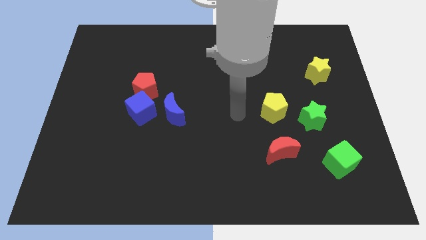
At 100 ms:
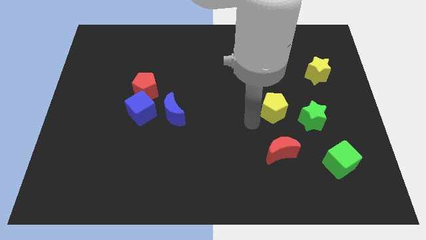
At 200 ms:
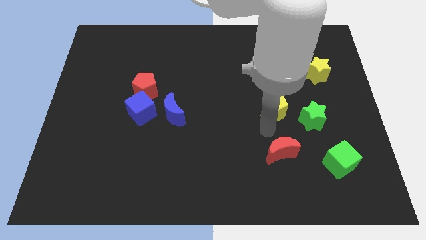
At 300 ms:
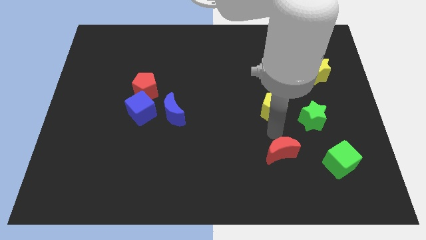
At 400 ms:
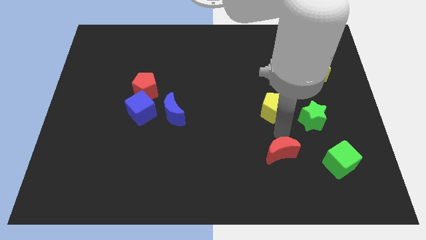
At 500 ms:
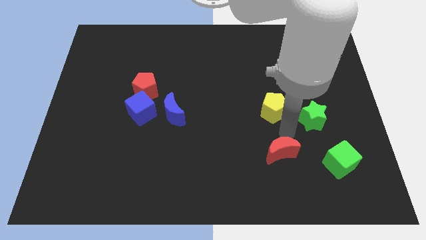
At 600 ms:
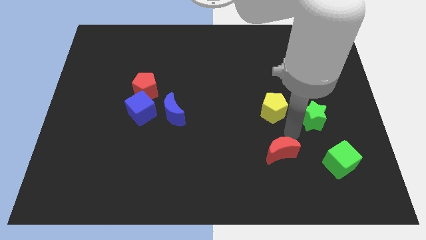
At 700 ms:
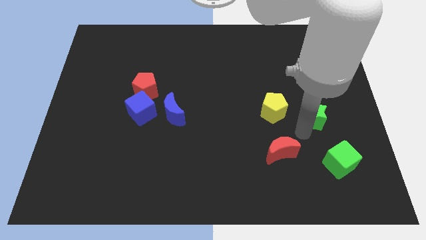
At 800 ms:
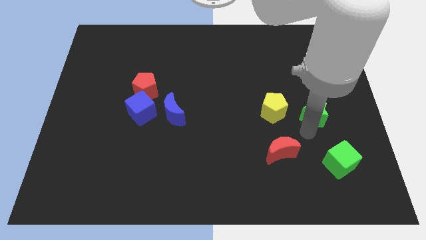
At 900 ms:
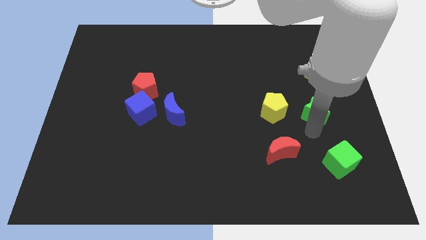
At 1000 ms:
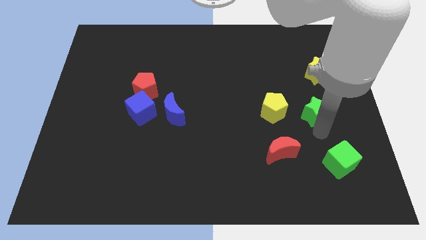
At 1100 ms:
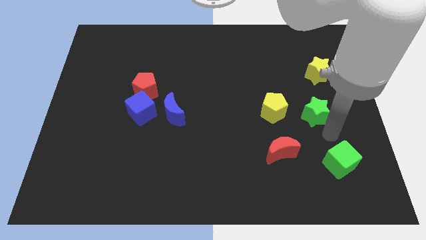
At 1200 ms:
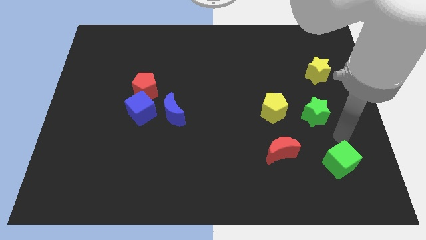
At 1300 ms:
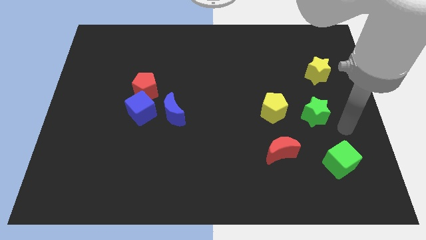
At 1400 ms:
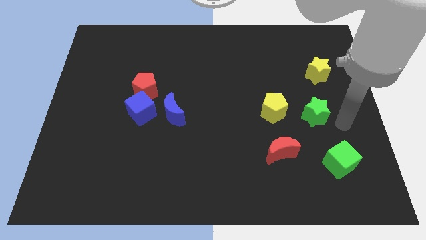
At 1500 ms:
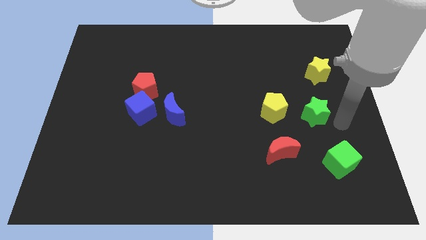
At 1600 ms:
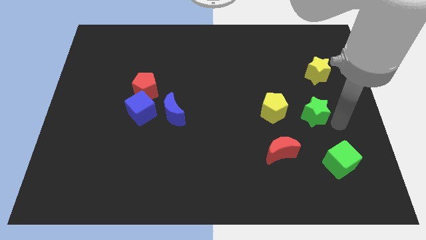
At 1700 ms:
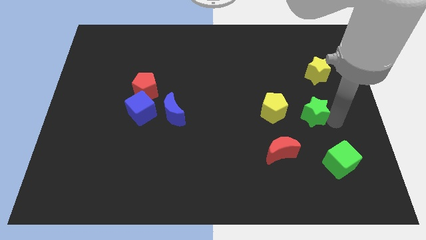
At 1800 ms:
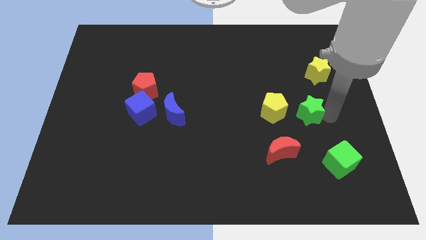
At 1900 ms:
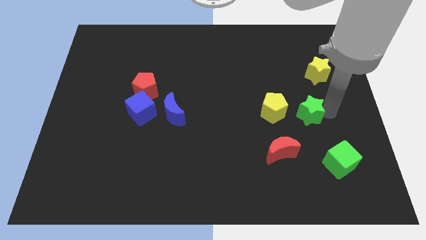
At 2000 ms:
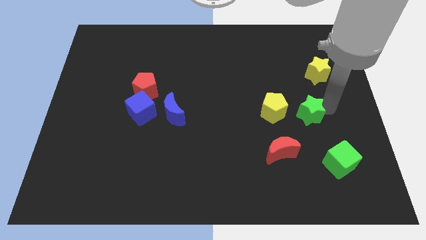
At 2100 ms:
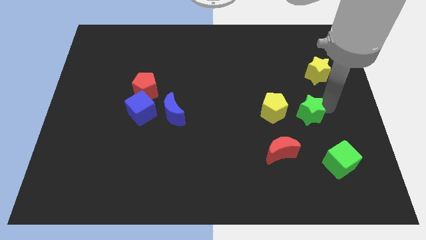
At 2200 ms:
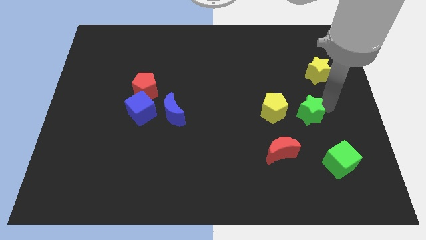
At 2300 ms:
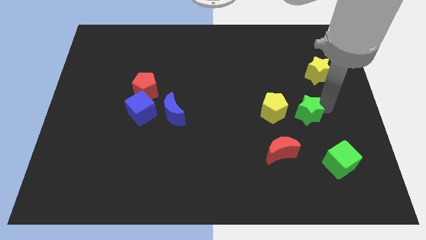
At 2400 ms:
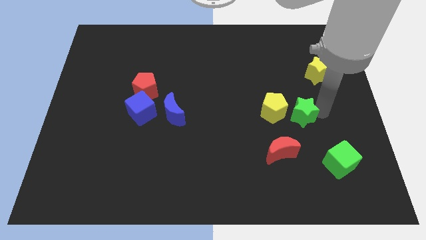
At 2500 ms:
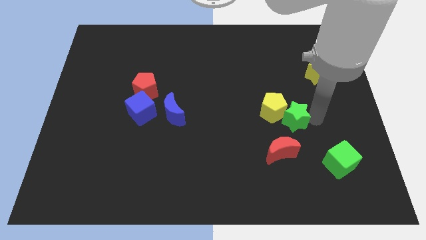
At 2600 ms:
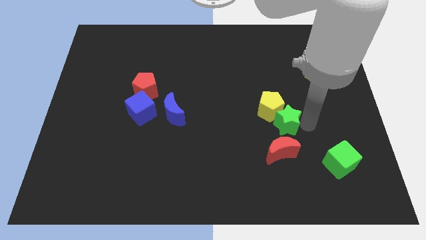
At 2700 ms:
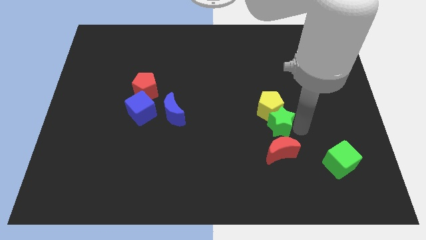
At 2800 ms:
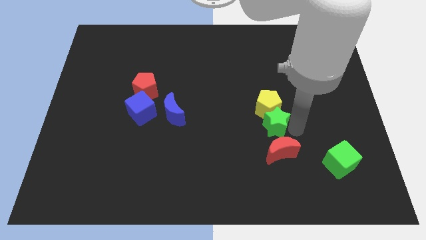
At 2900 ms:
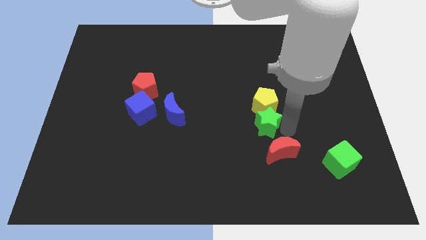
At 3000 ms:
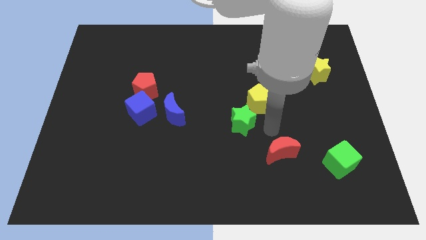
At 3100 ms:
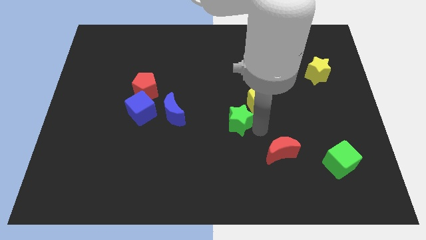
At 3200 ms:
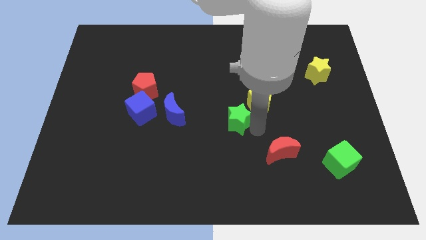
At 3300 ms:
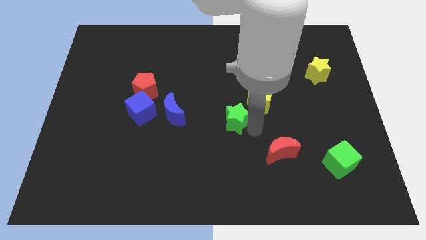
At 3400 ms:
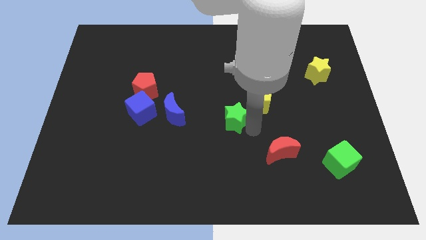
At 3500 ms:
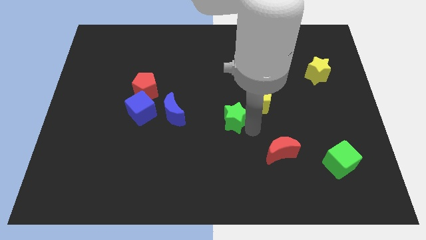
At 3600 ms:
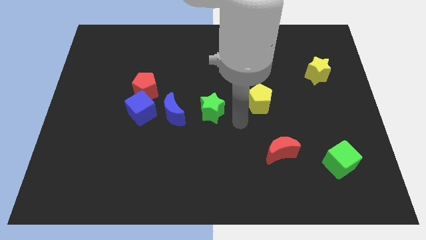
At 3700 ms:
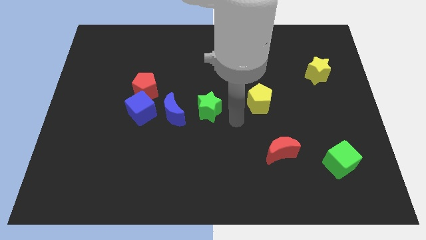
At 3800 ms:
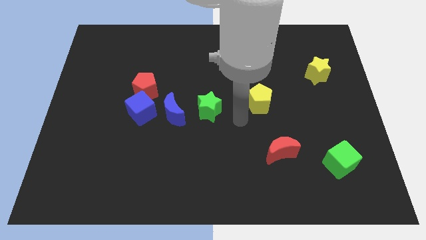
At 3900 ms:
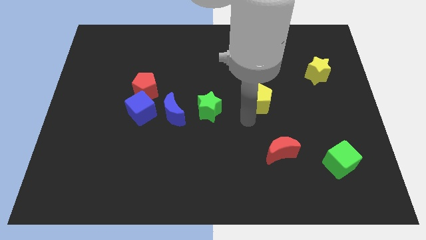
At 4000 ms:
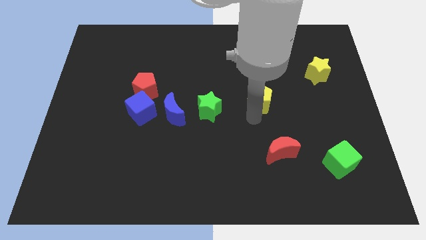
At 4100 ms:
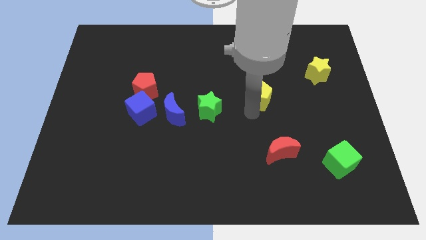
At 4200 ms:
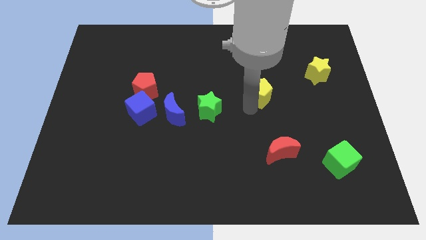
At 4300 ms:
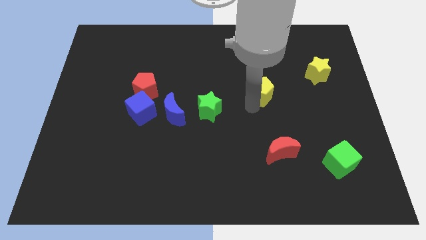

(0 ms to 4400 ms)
move green star slightly left

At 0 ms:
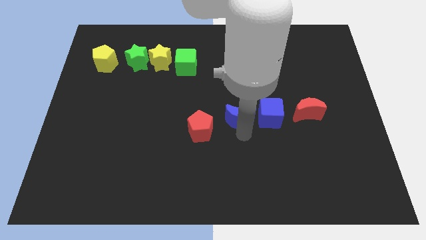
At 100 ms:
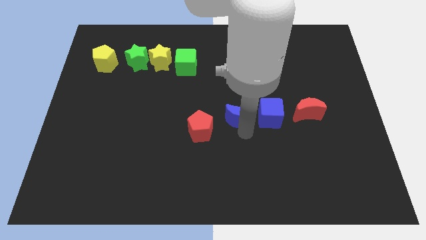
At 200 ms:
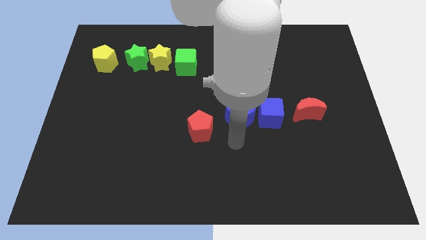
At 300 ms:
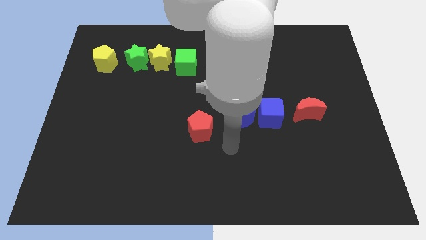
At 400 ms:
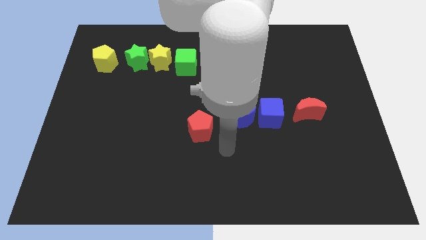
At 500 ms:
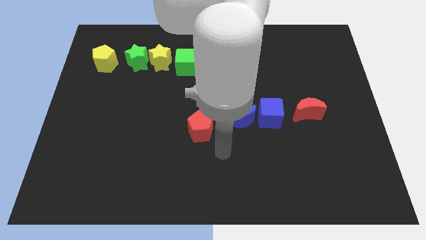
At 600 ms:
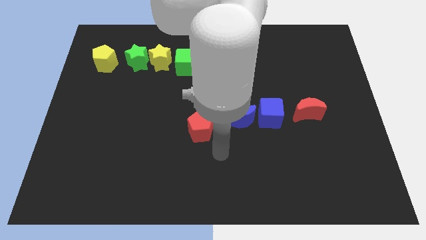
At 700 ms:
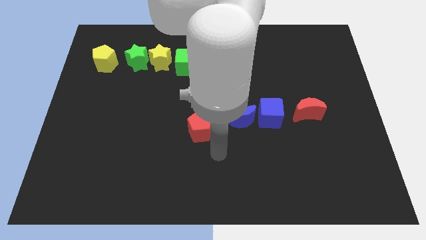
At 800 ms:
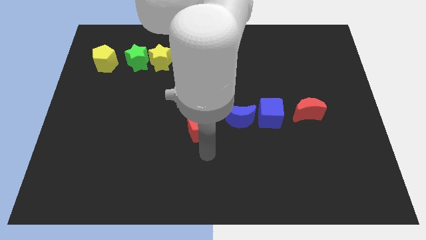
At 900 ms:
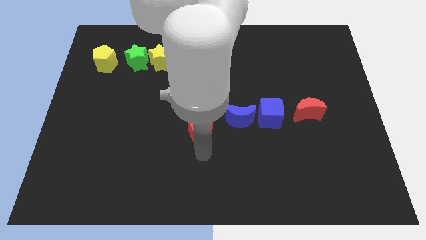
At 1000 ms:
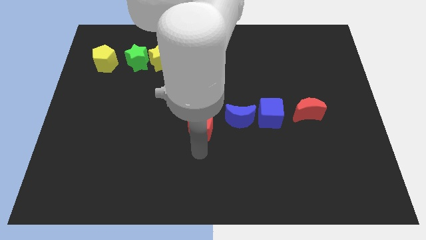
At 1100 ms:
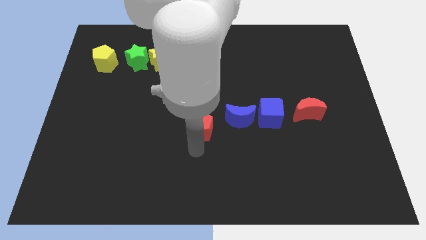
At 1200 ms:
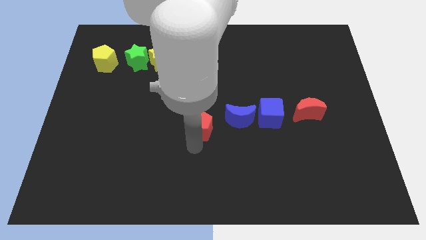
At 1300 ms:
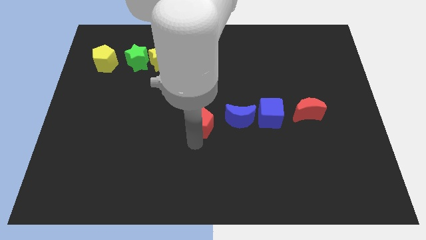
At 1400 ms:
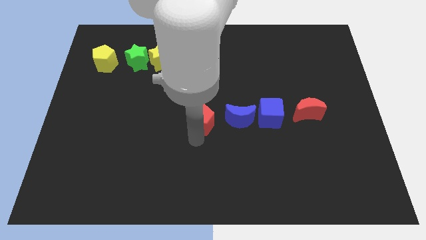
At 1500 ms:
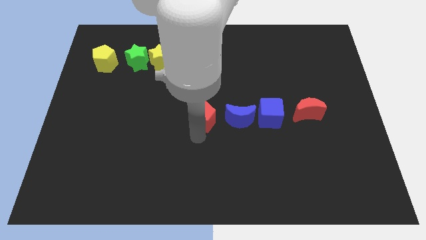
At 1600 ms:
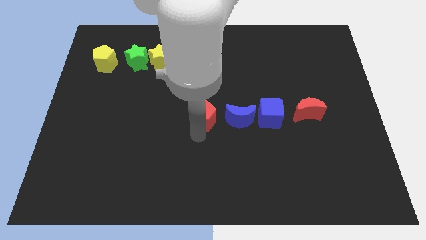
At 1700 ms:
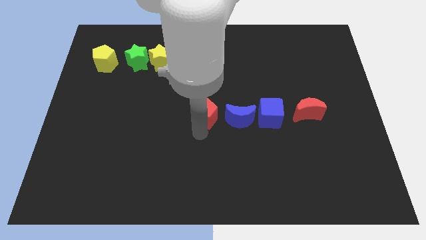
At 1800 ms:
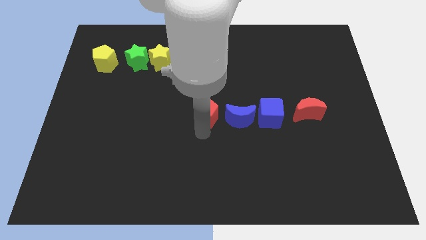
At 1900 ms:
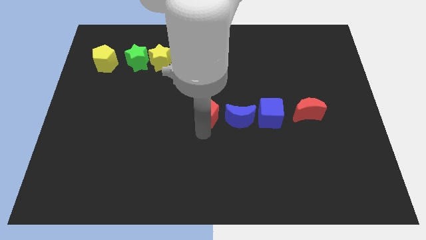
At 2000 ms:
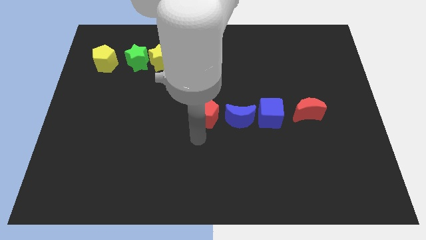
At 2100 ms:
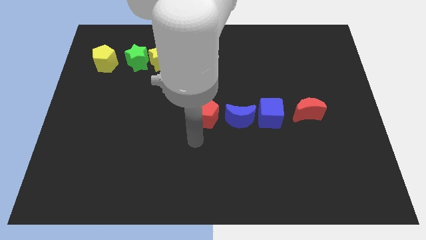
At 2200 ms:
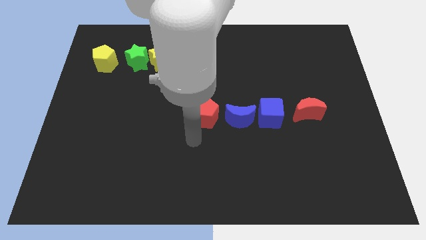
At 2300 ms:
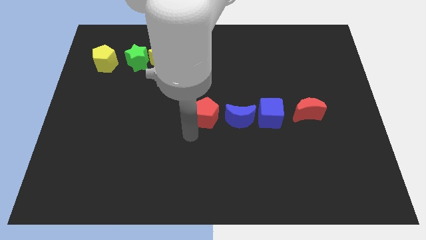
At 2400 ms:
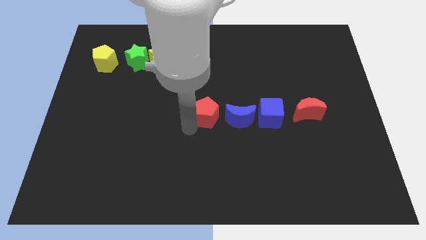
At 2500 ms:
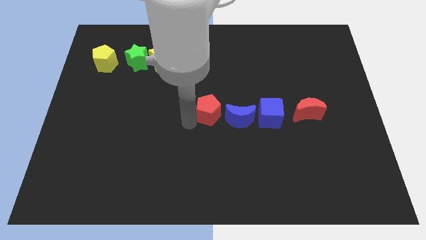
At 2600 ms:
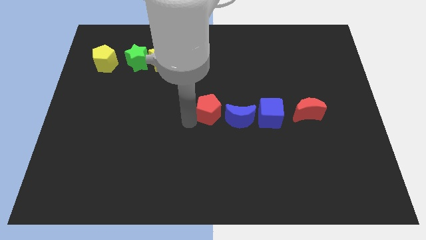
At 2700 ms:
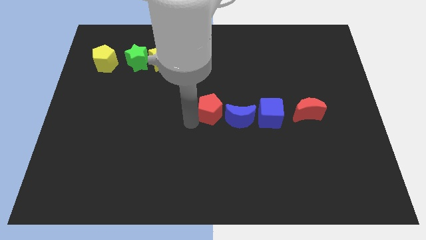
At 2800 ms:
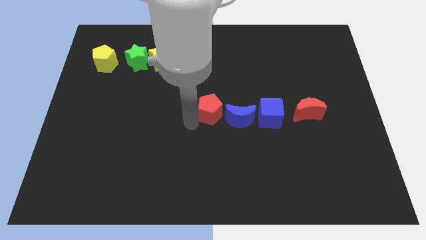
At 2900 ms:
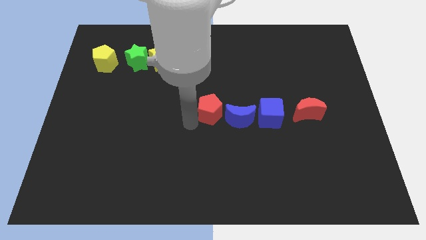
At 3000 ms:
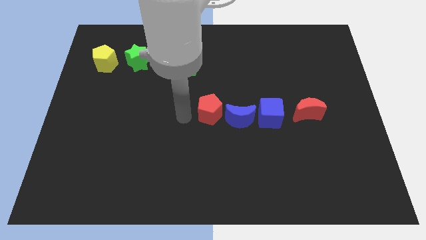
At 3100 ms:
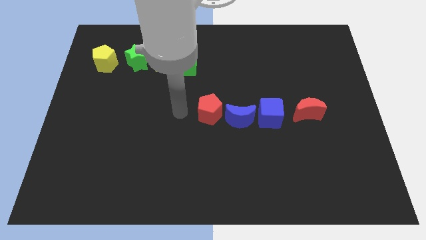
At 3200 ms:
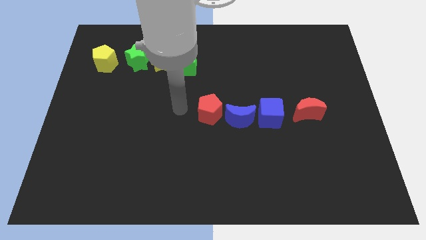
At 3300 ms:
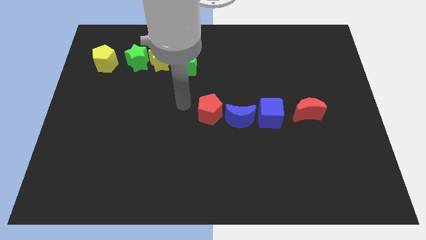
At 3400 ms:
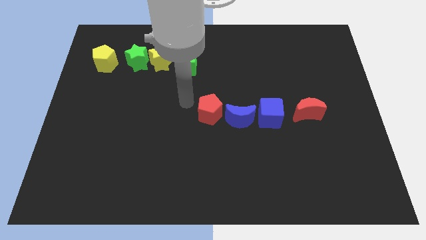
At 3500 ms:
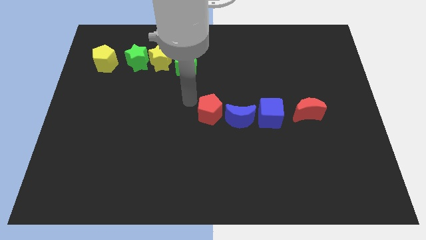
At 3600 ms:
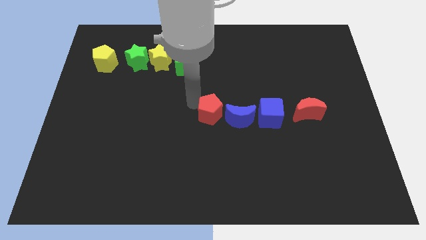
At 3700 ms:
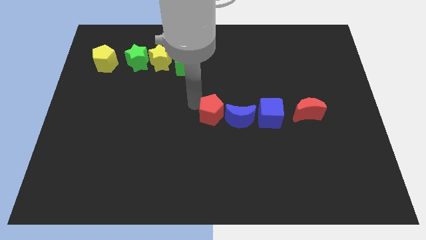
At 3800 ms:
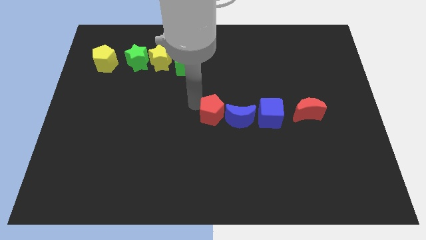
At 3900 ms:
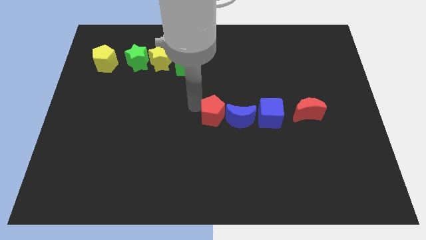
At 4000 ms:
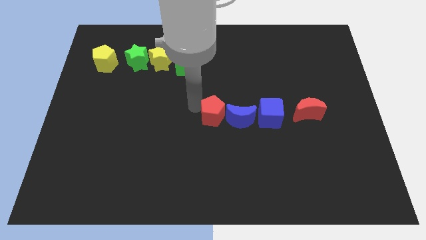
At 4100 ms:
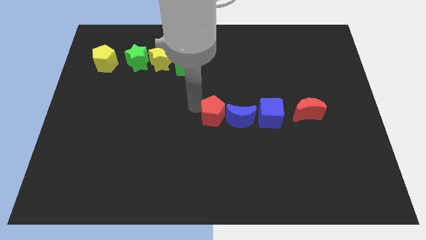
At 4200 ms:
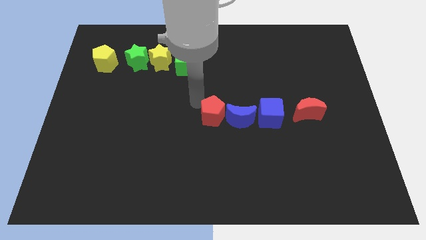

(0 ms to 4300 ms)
move the red pentagon into blue moon

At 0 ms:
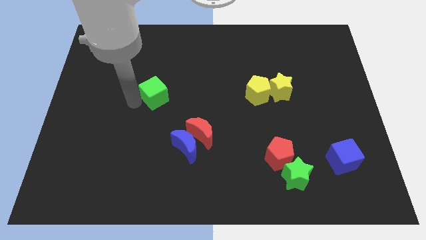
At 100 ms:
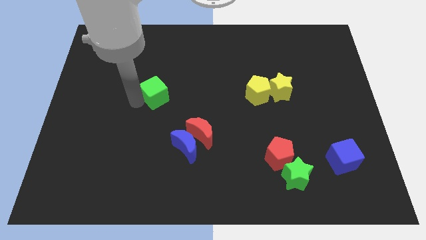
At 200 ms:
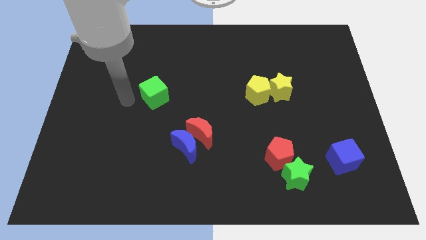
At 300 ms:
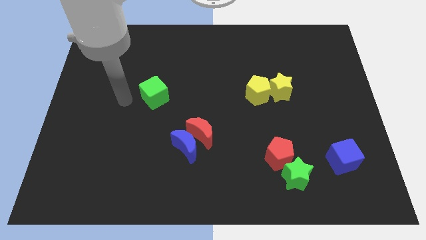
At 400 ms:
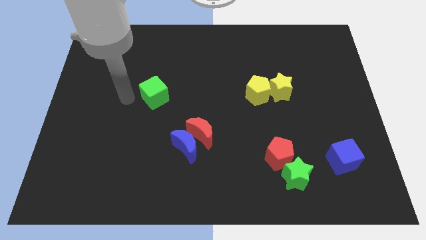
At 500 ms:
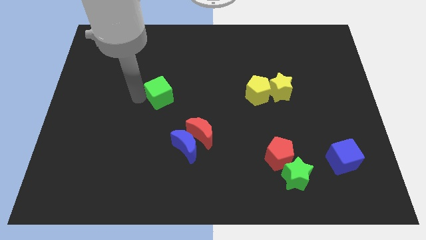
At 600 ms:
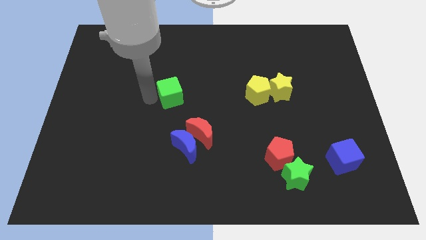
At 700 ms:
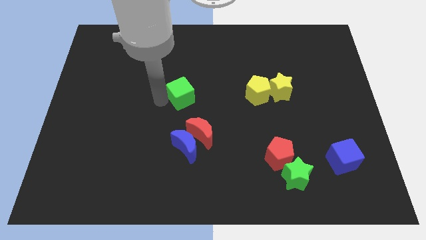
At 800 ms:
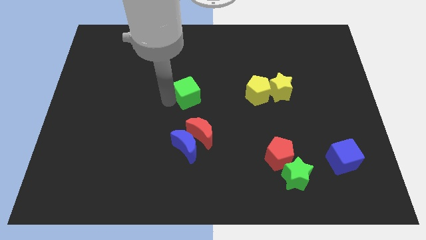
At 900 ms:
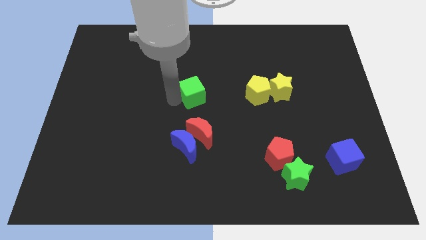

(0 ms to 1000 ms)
place the green cube to the top of red crescent
